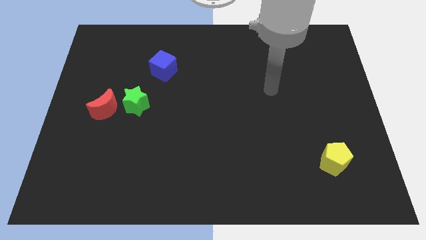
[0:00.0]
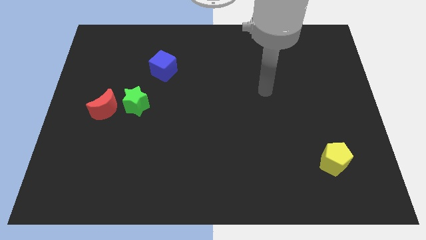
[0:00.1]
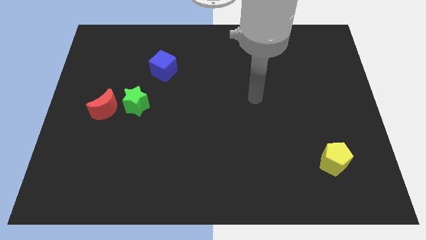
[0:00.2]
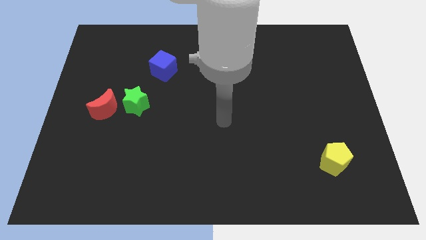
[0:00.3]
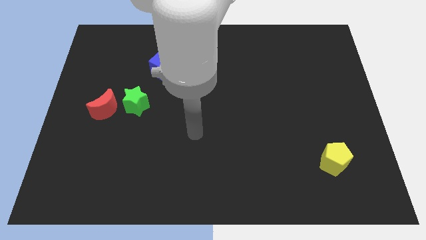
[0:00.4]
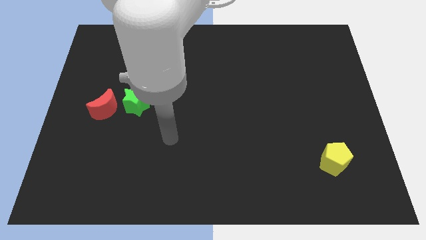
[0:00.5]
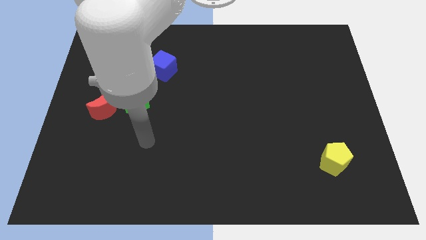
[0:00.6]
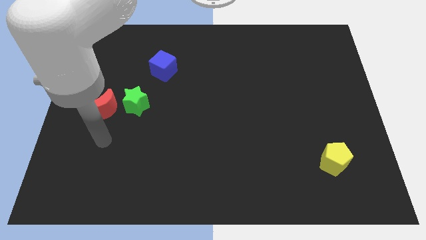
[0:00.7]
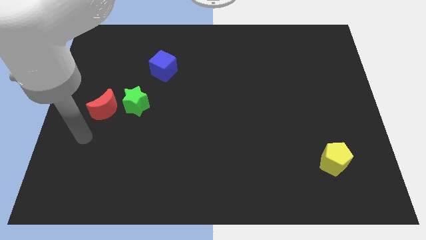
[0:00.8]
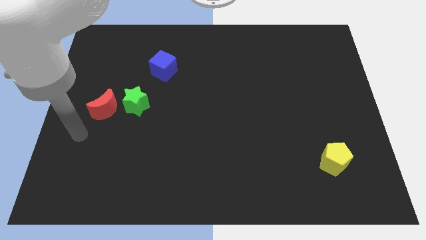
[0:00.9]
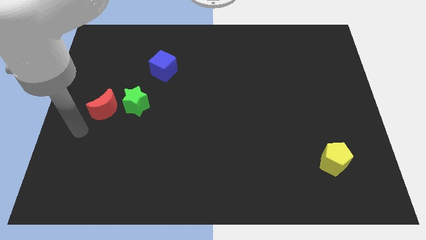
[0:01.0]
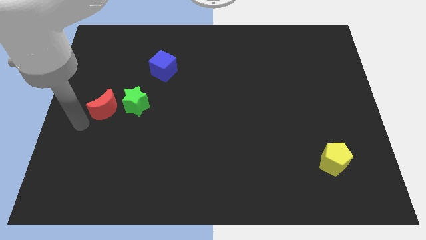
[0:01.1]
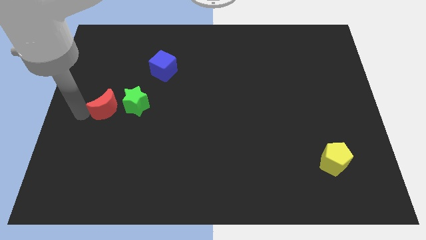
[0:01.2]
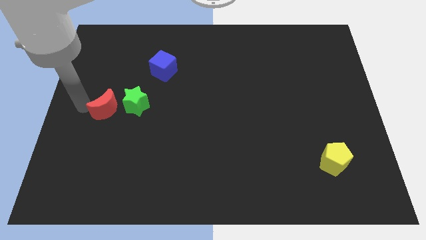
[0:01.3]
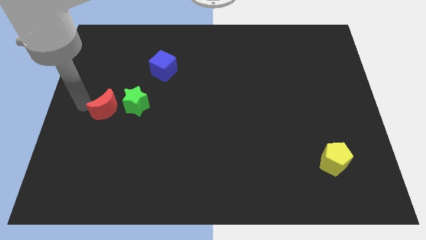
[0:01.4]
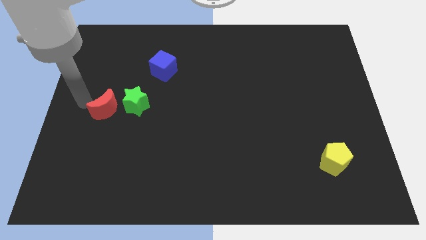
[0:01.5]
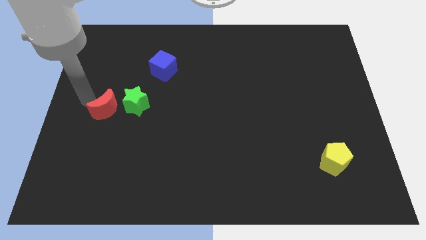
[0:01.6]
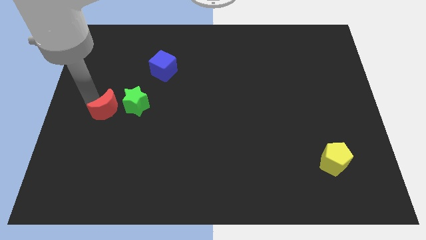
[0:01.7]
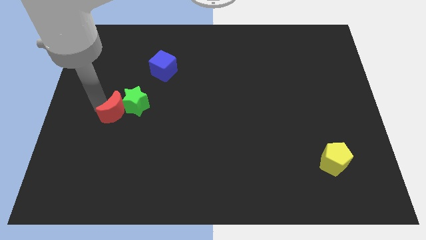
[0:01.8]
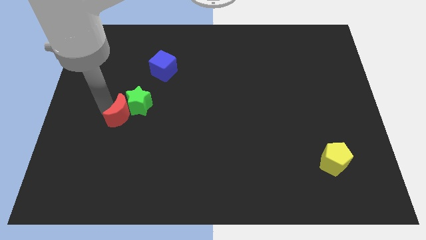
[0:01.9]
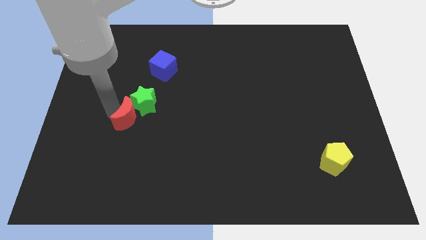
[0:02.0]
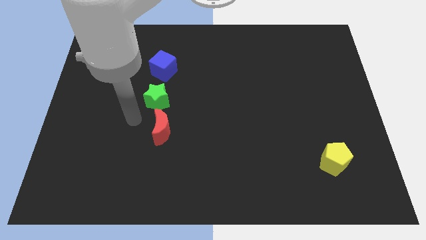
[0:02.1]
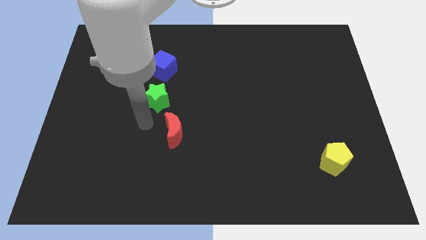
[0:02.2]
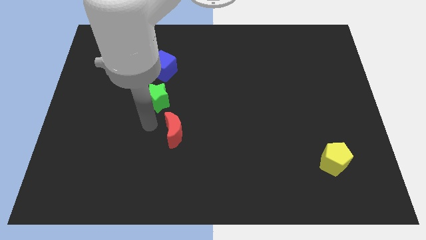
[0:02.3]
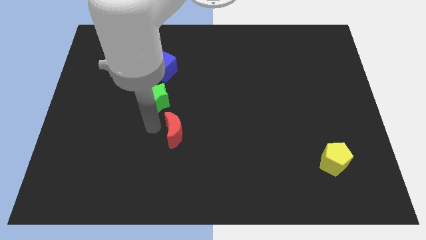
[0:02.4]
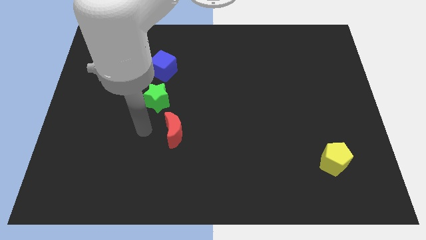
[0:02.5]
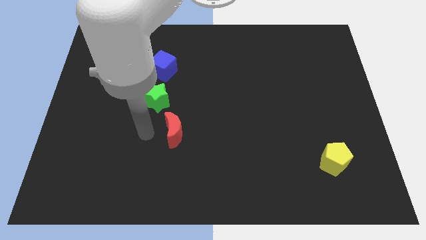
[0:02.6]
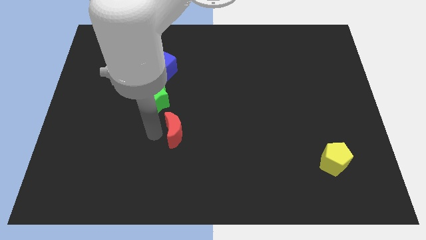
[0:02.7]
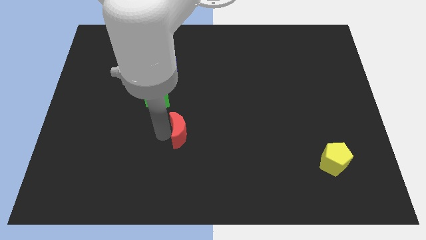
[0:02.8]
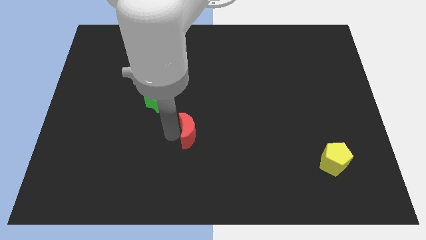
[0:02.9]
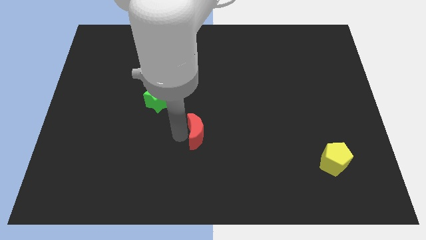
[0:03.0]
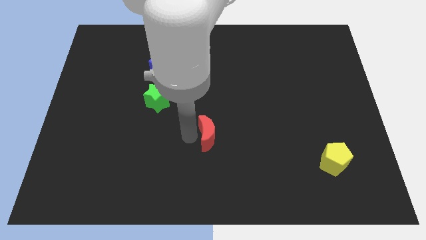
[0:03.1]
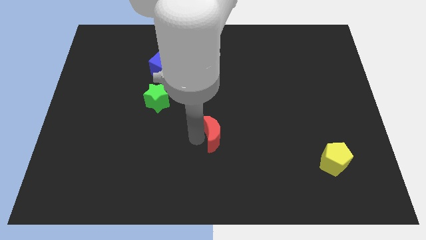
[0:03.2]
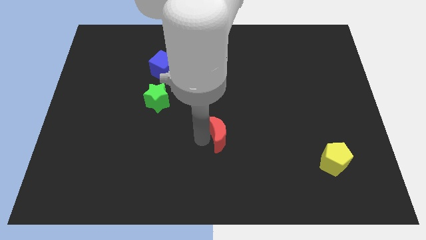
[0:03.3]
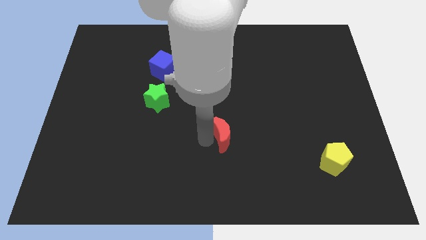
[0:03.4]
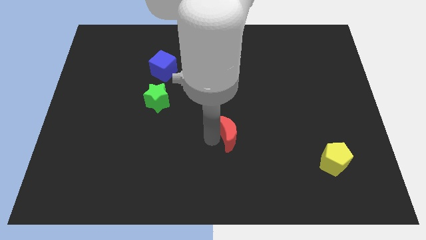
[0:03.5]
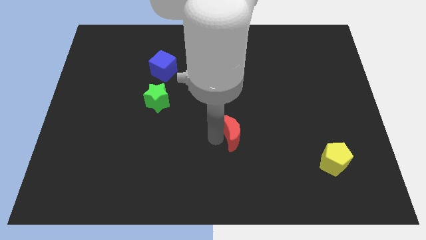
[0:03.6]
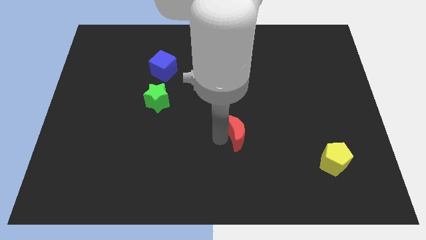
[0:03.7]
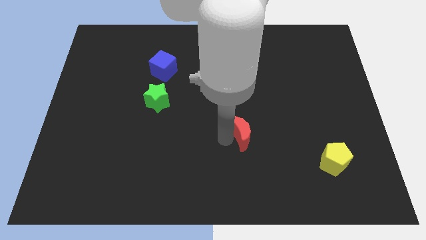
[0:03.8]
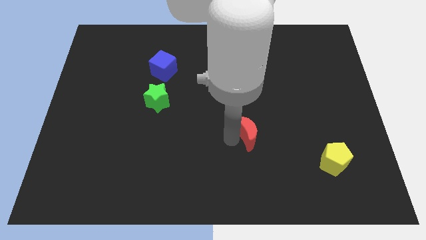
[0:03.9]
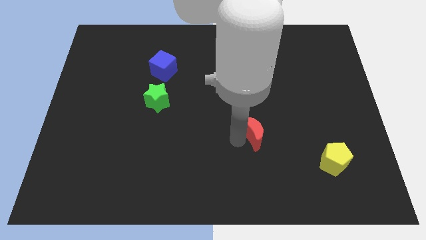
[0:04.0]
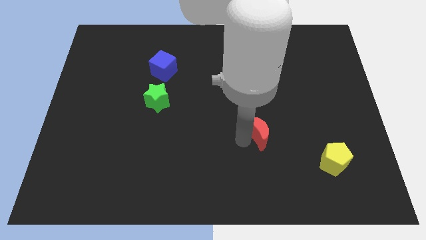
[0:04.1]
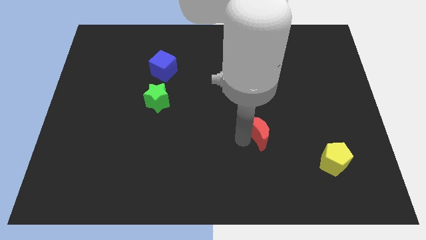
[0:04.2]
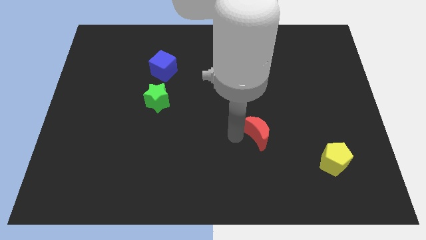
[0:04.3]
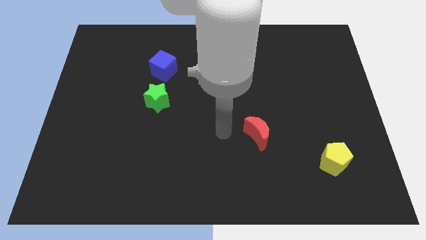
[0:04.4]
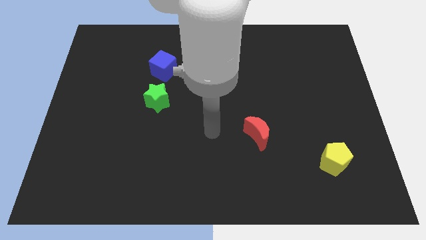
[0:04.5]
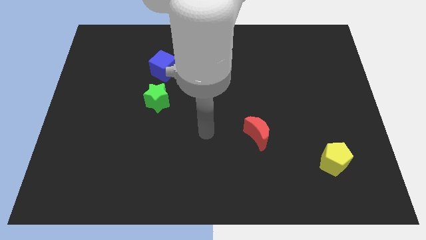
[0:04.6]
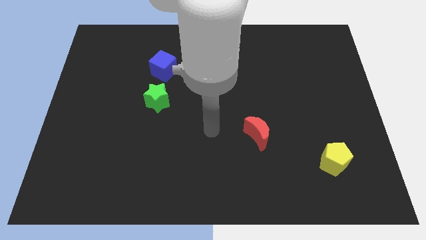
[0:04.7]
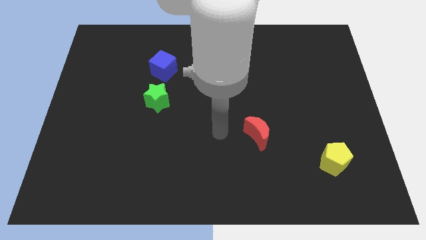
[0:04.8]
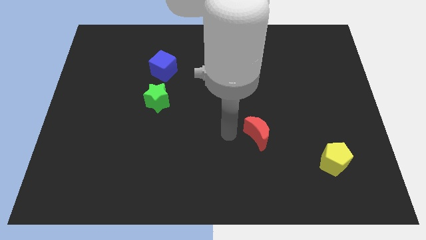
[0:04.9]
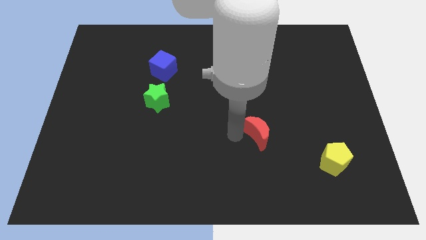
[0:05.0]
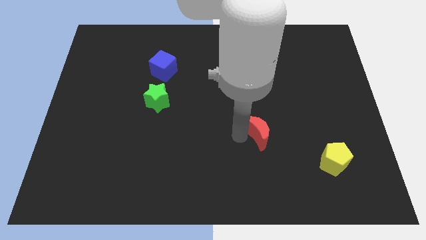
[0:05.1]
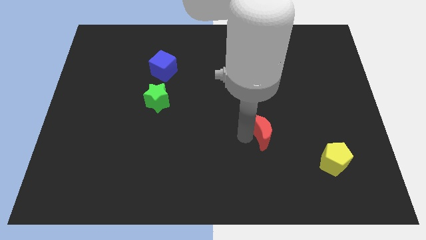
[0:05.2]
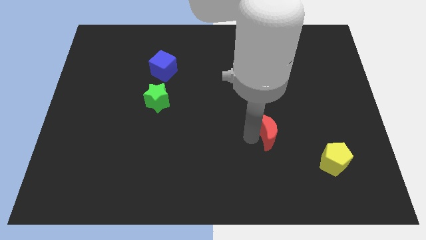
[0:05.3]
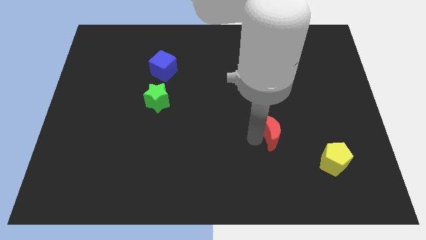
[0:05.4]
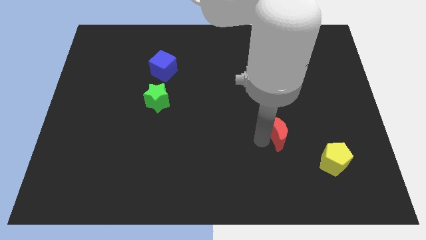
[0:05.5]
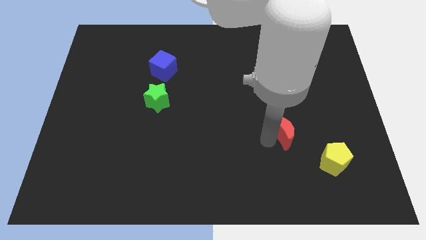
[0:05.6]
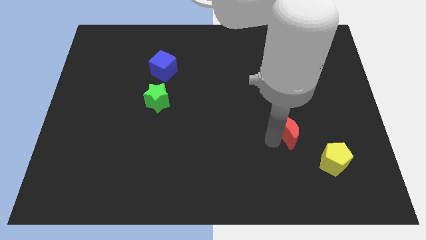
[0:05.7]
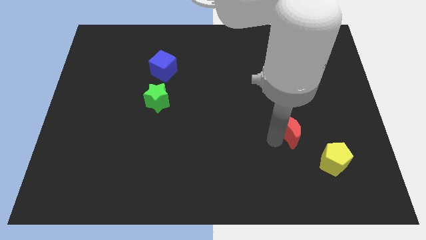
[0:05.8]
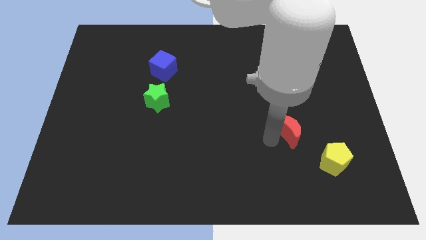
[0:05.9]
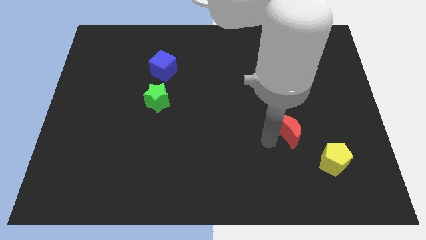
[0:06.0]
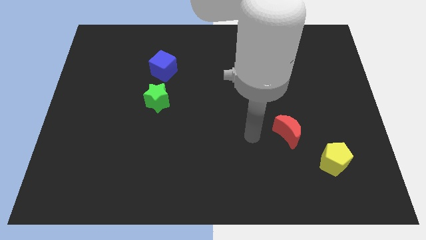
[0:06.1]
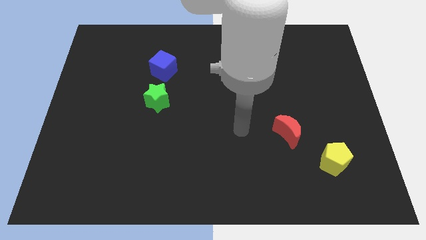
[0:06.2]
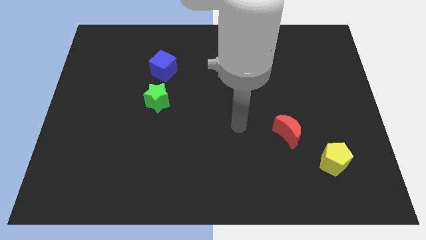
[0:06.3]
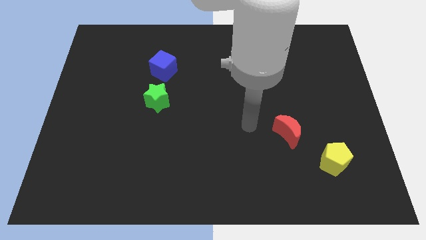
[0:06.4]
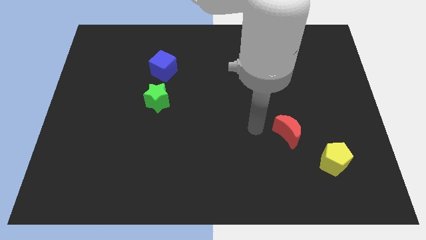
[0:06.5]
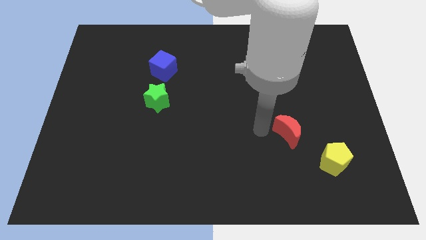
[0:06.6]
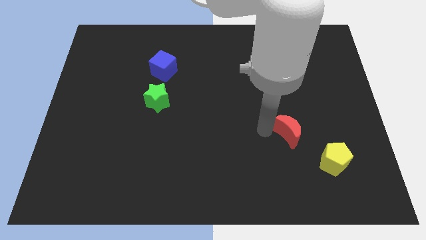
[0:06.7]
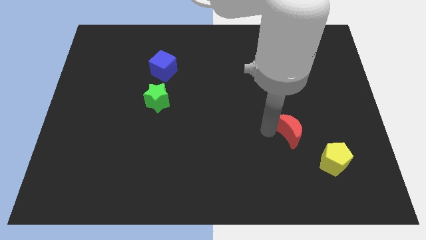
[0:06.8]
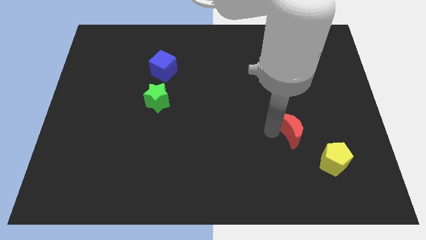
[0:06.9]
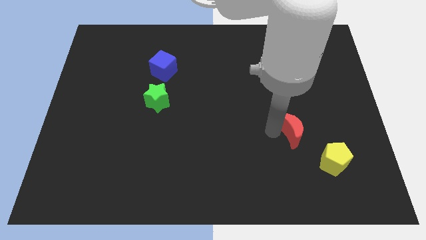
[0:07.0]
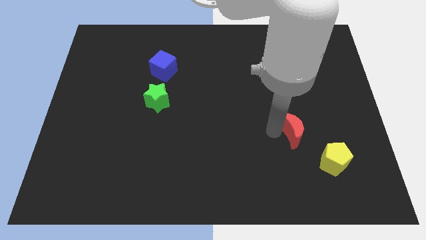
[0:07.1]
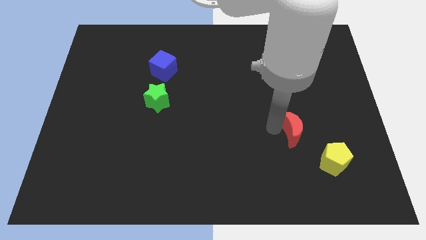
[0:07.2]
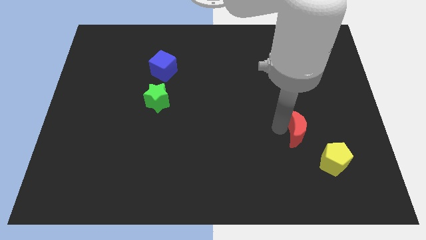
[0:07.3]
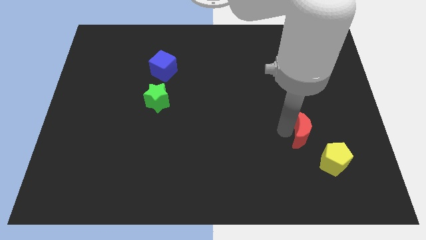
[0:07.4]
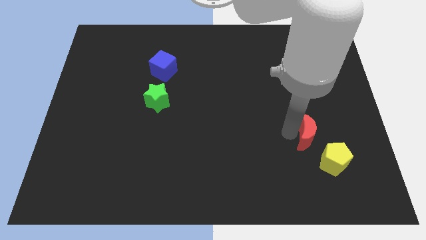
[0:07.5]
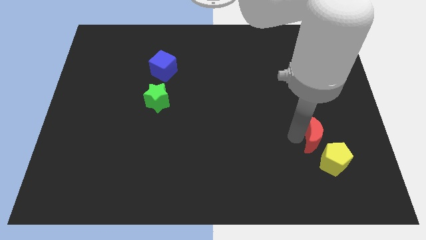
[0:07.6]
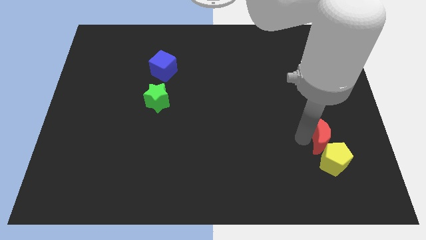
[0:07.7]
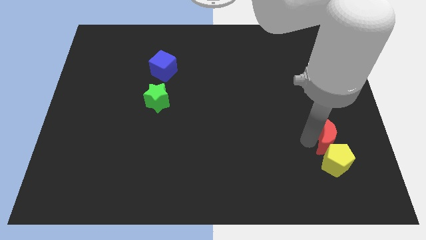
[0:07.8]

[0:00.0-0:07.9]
move the red moon to the yellow pentagon

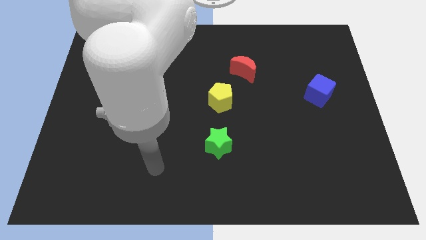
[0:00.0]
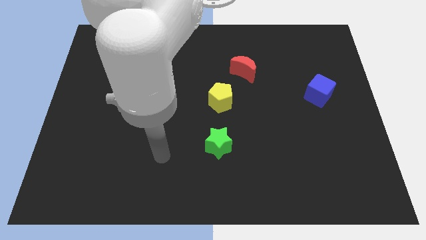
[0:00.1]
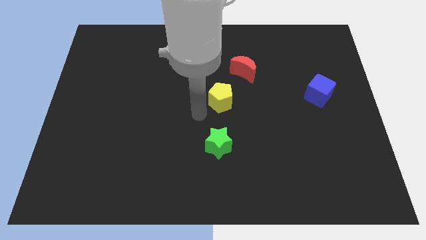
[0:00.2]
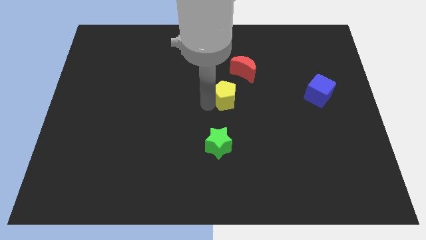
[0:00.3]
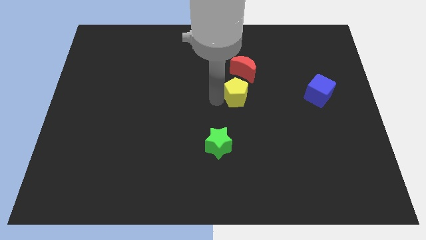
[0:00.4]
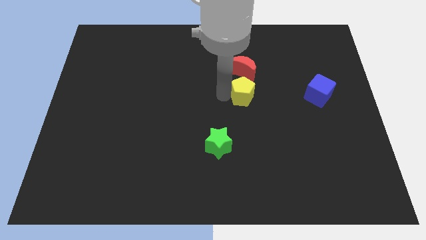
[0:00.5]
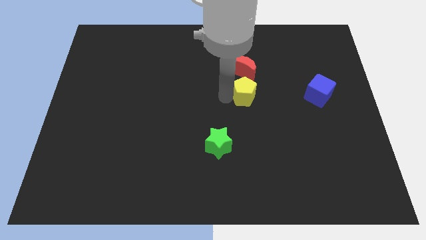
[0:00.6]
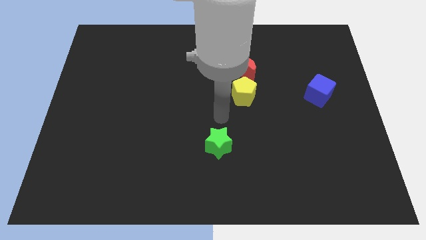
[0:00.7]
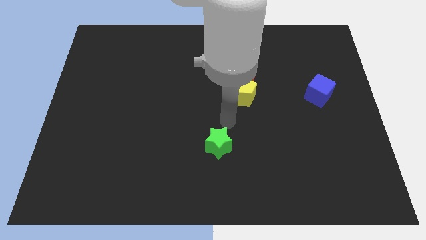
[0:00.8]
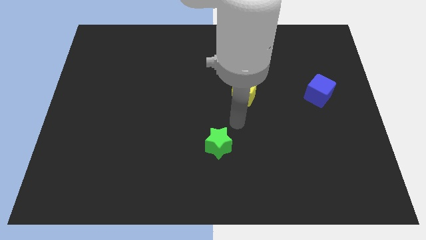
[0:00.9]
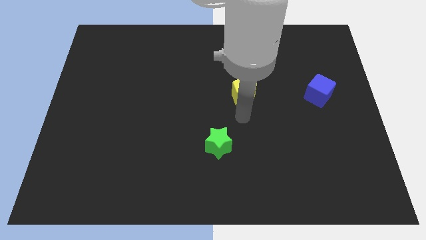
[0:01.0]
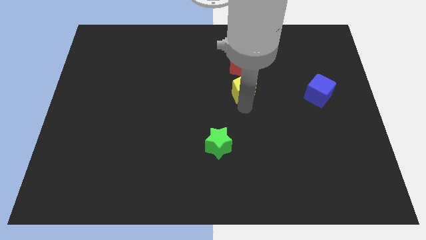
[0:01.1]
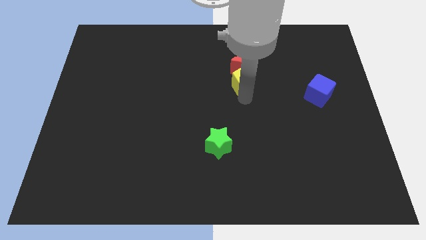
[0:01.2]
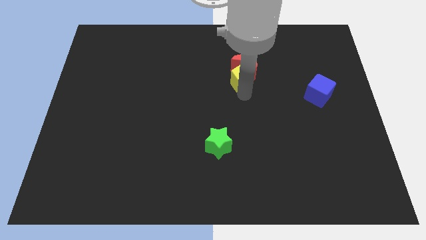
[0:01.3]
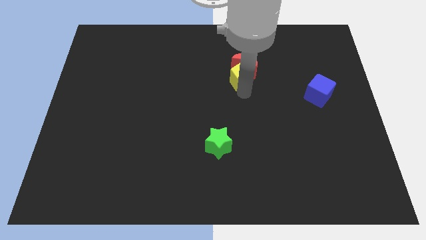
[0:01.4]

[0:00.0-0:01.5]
slide the pentagon towards the red block
